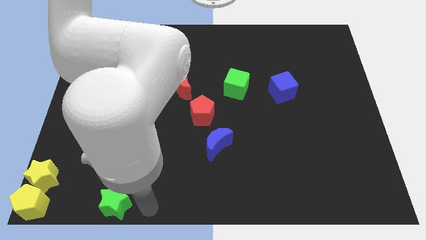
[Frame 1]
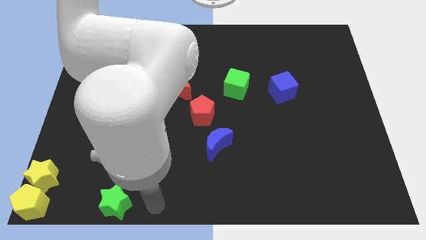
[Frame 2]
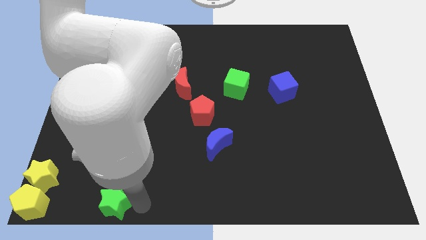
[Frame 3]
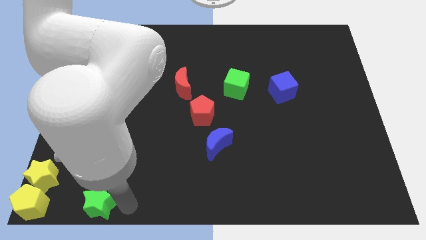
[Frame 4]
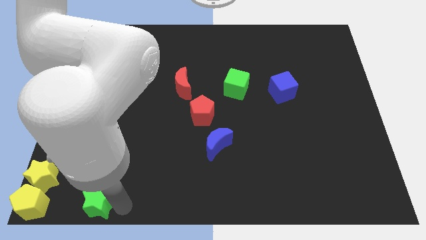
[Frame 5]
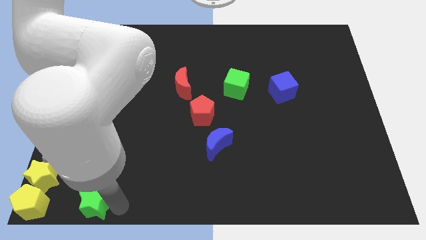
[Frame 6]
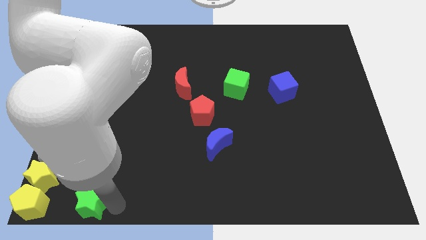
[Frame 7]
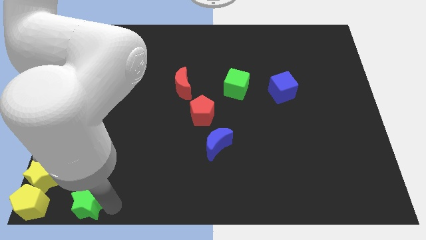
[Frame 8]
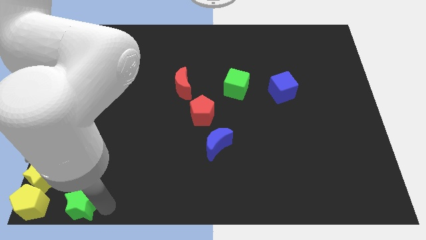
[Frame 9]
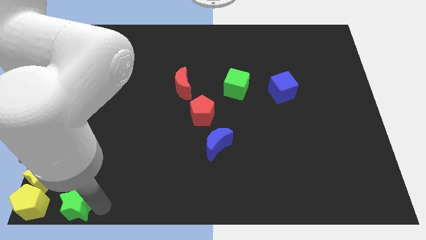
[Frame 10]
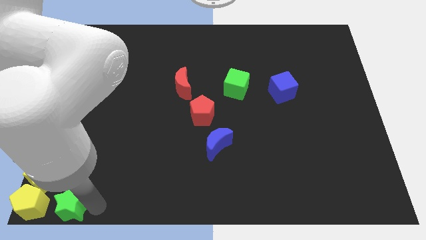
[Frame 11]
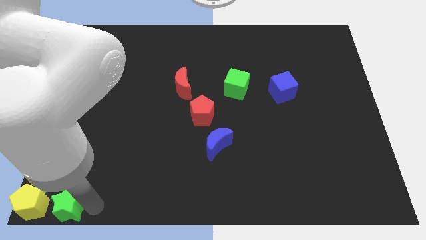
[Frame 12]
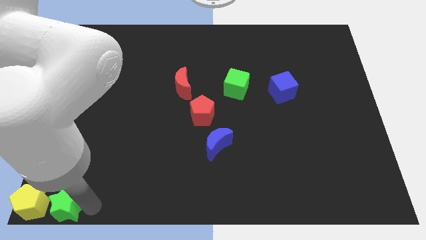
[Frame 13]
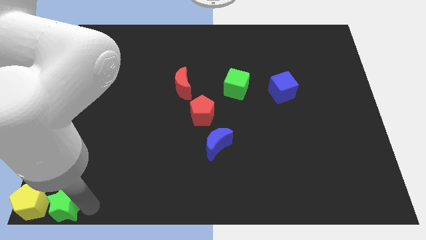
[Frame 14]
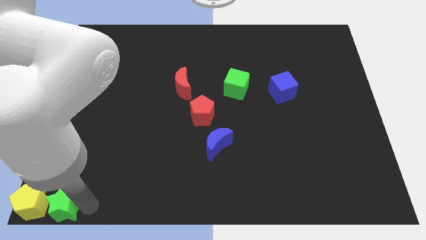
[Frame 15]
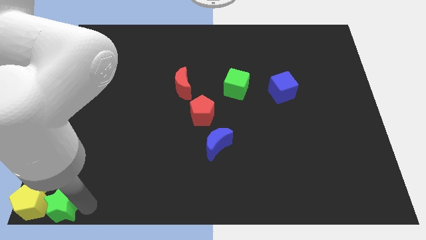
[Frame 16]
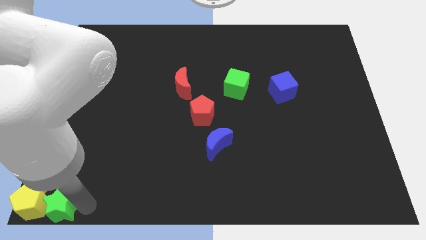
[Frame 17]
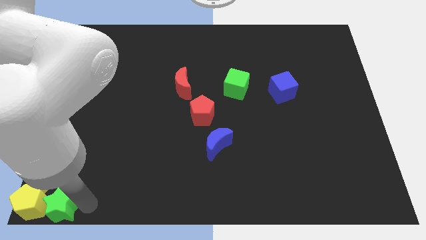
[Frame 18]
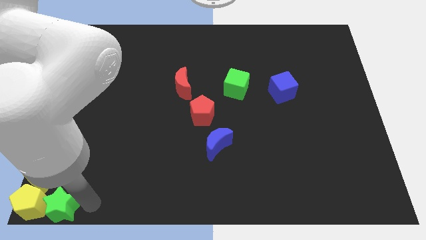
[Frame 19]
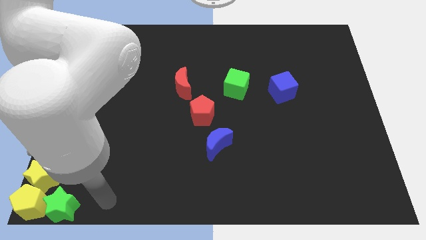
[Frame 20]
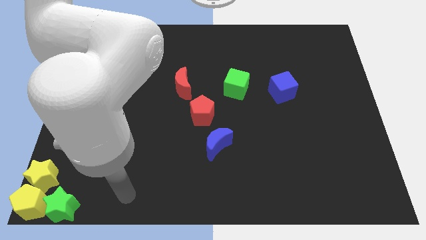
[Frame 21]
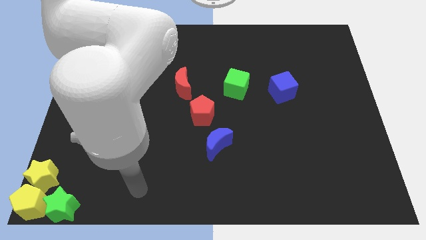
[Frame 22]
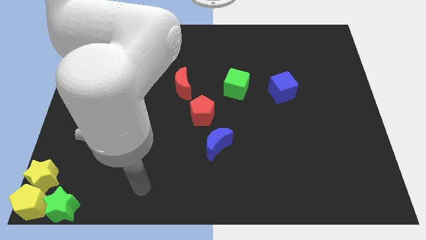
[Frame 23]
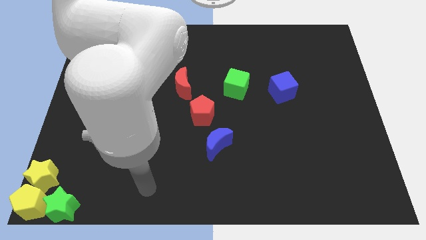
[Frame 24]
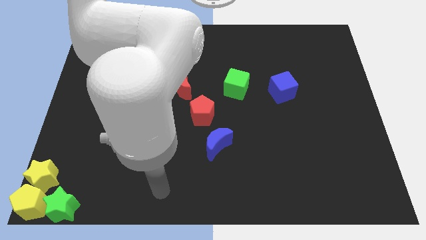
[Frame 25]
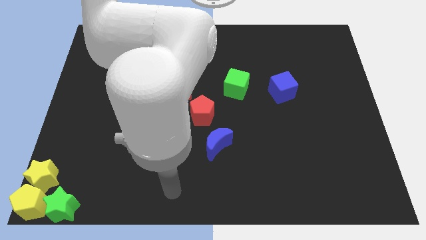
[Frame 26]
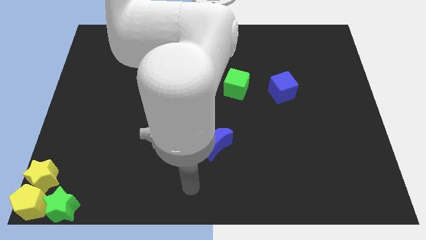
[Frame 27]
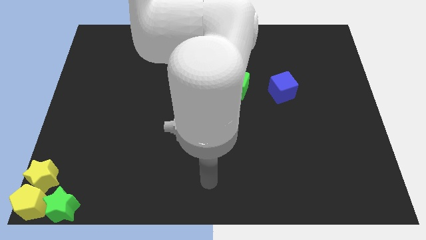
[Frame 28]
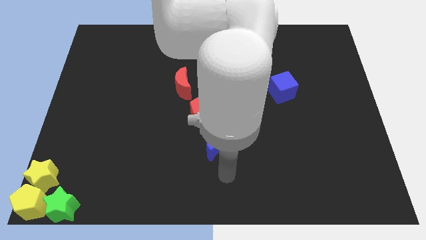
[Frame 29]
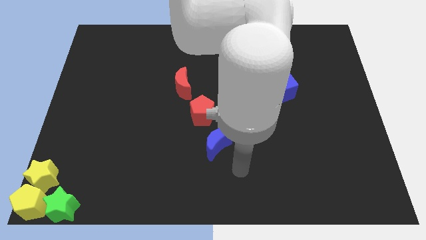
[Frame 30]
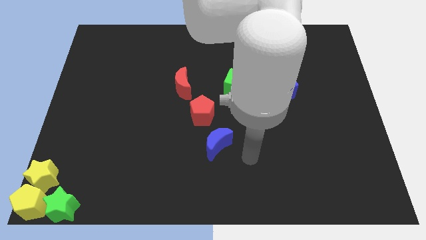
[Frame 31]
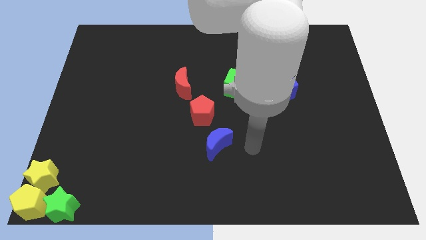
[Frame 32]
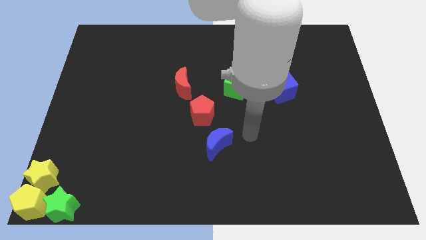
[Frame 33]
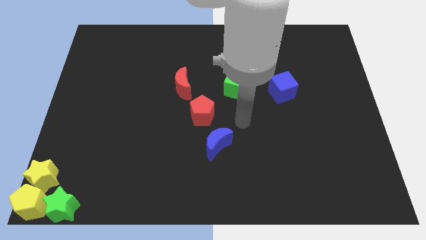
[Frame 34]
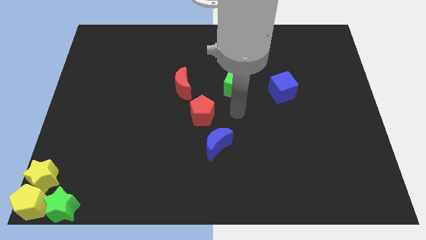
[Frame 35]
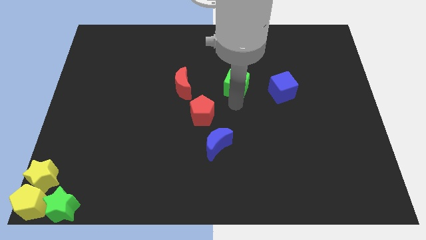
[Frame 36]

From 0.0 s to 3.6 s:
push the arm below the green cube

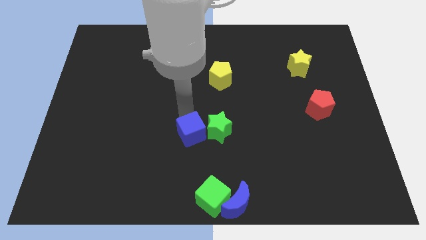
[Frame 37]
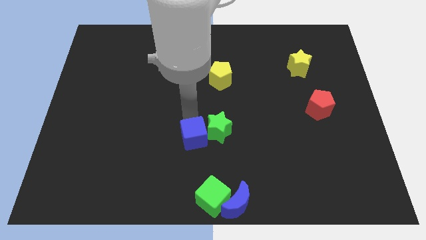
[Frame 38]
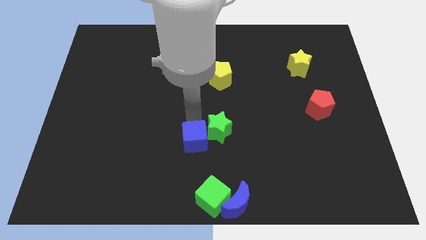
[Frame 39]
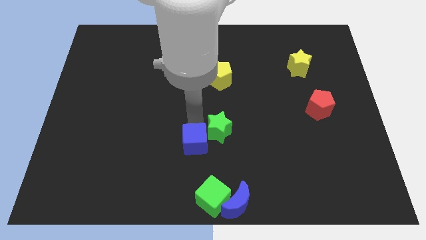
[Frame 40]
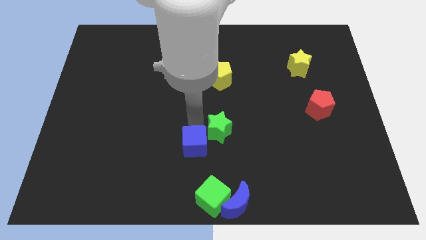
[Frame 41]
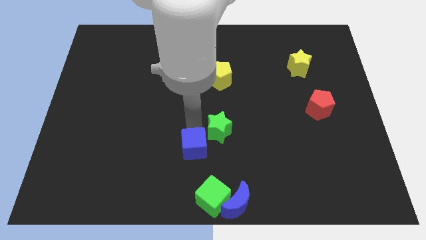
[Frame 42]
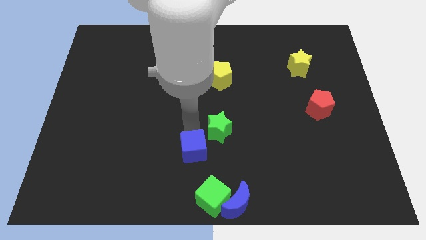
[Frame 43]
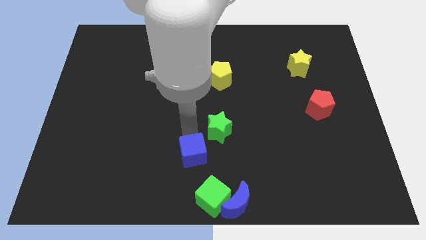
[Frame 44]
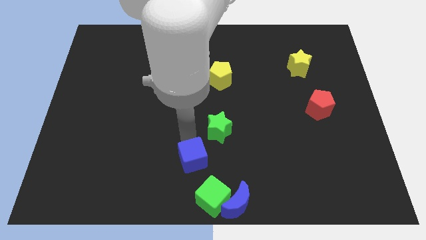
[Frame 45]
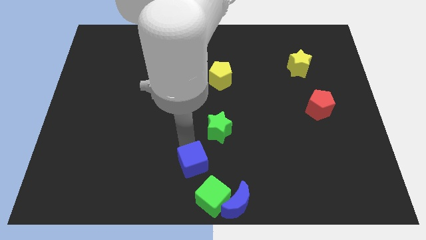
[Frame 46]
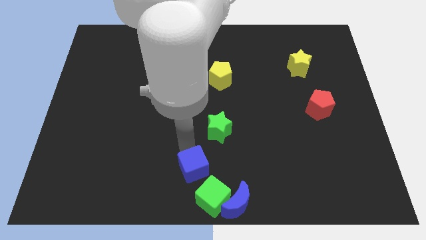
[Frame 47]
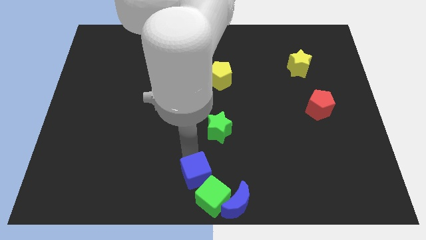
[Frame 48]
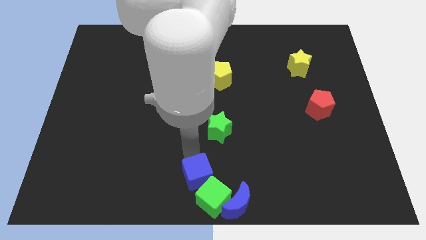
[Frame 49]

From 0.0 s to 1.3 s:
separate the blue cube from the green star

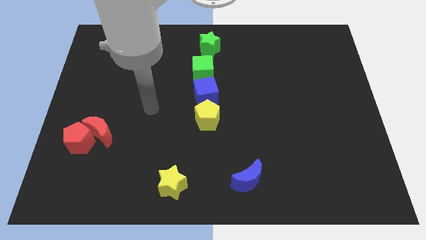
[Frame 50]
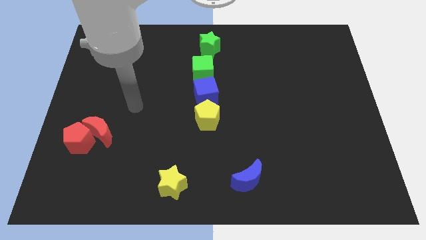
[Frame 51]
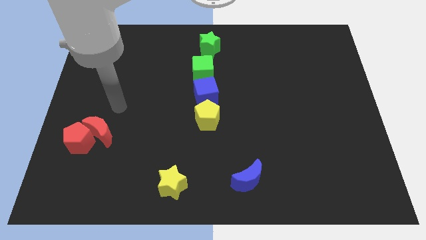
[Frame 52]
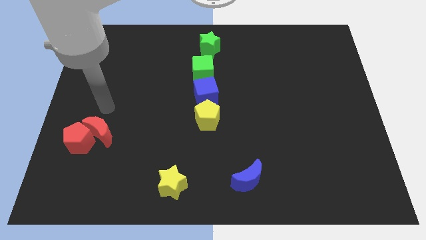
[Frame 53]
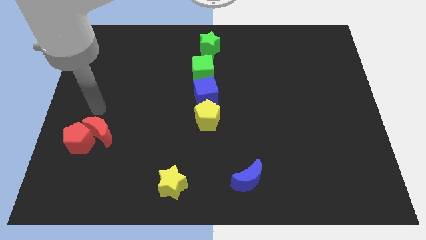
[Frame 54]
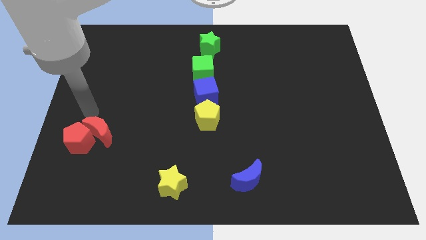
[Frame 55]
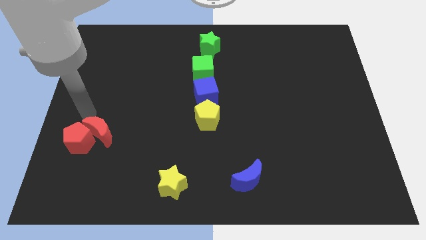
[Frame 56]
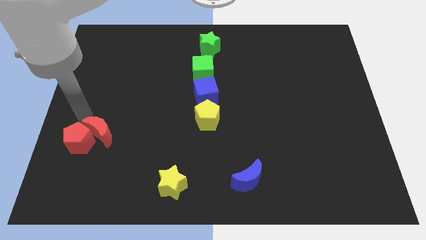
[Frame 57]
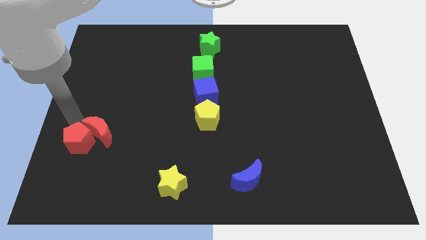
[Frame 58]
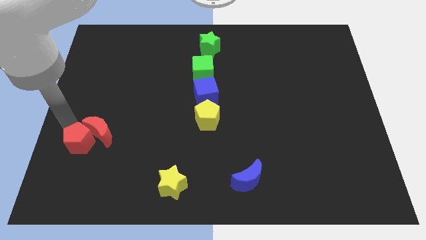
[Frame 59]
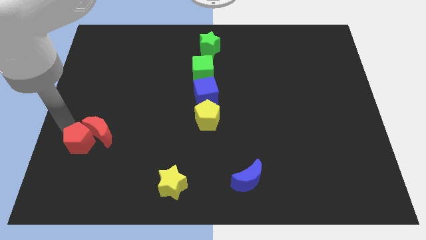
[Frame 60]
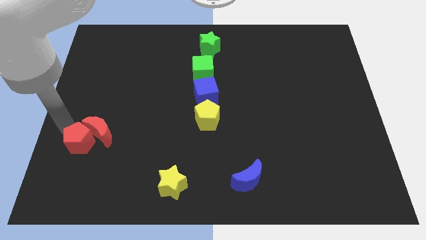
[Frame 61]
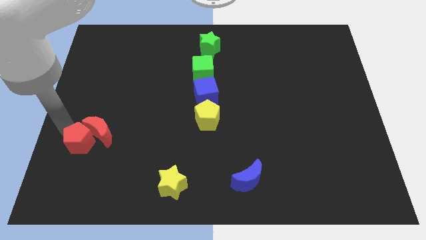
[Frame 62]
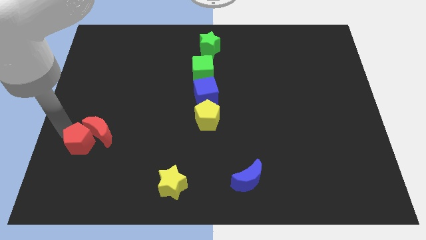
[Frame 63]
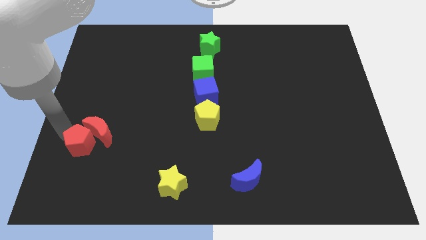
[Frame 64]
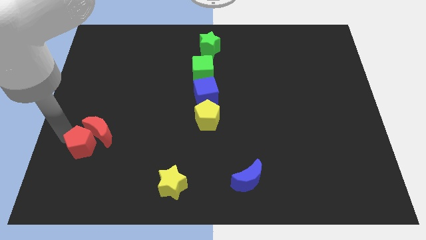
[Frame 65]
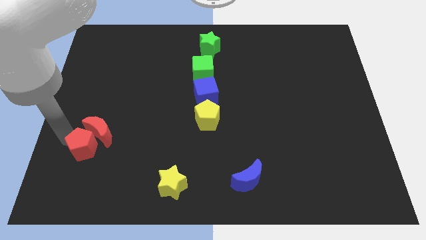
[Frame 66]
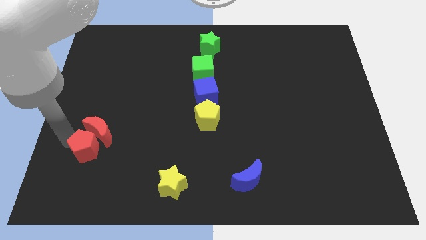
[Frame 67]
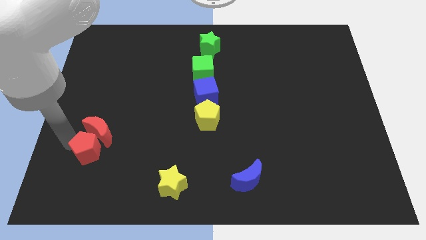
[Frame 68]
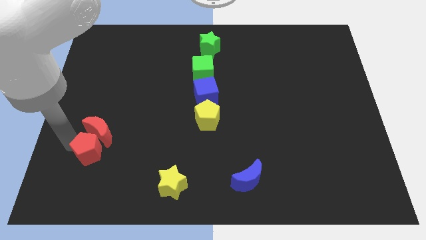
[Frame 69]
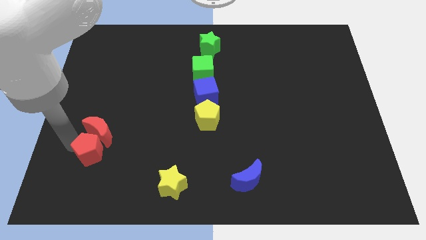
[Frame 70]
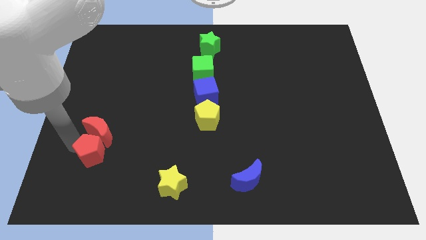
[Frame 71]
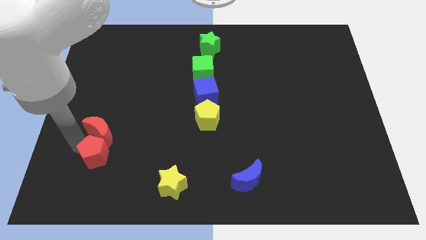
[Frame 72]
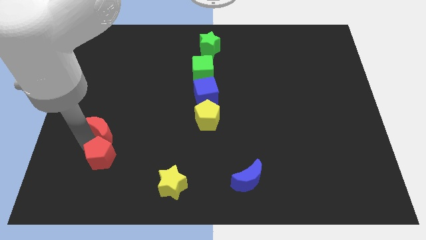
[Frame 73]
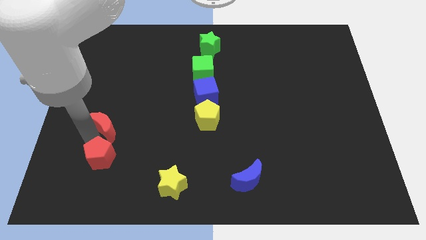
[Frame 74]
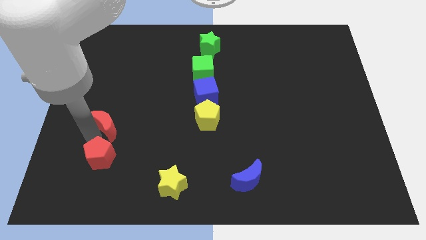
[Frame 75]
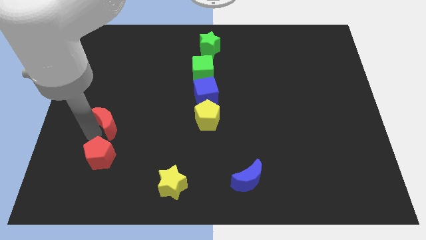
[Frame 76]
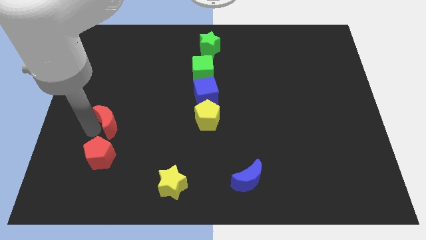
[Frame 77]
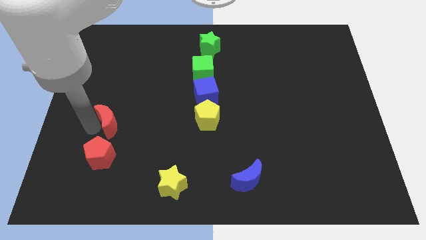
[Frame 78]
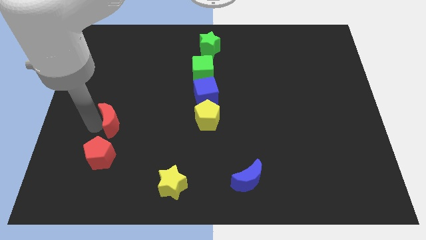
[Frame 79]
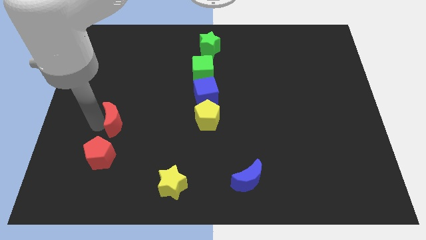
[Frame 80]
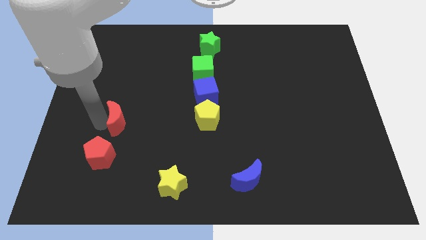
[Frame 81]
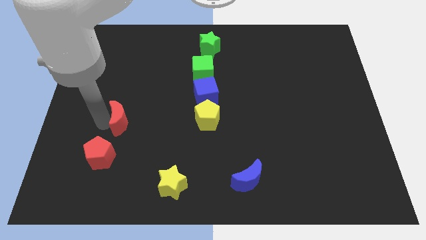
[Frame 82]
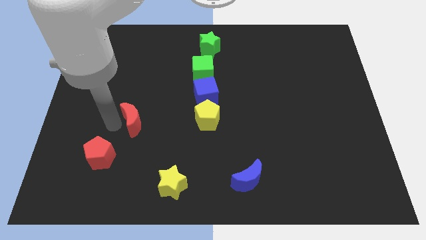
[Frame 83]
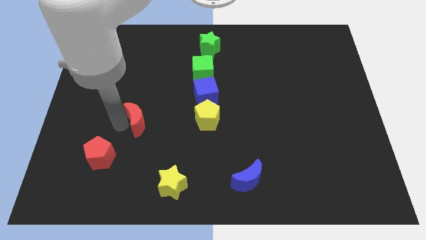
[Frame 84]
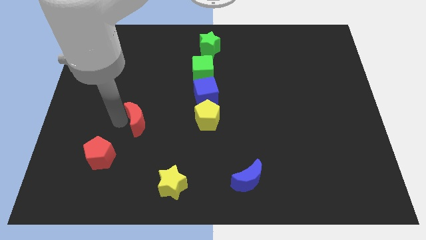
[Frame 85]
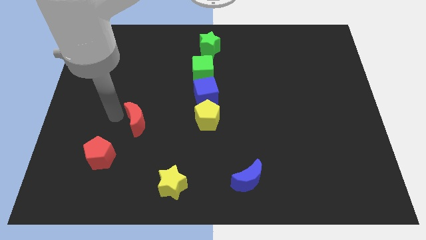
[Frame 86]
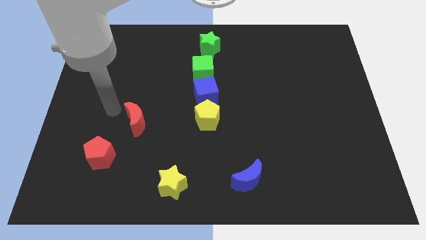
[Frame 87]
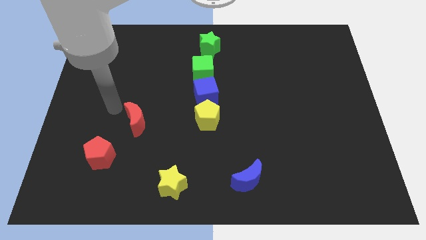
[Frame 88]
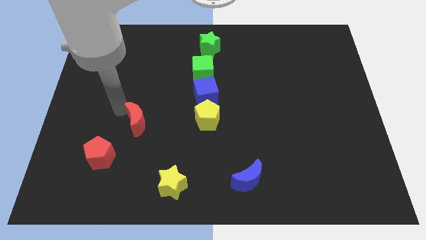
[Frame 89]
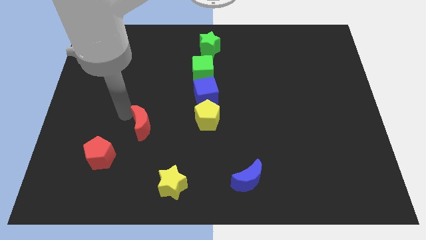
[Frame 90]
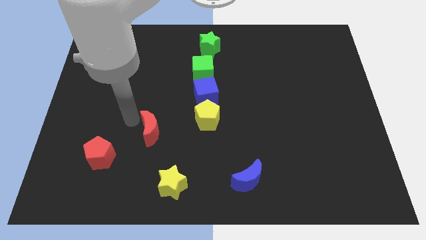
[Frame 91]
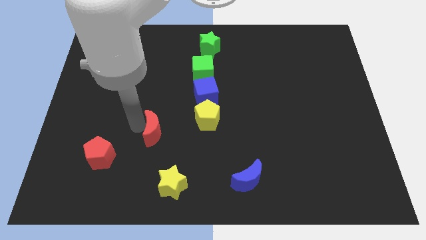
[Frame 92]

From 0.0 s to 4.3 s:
move the red moon slightly right
